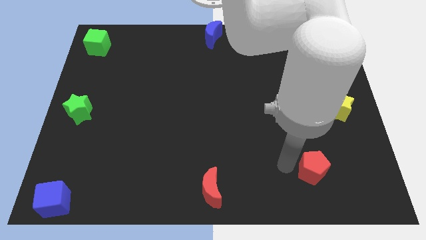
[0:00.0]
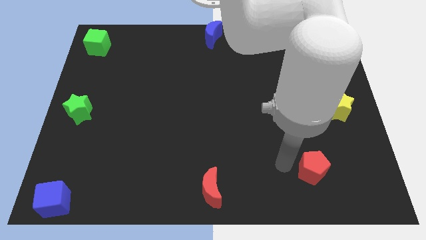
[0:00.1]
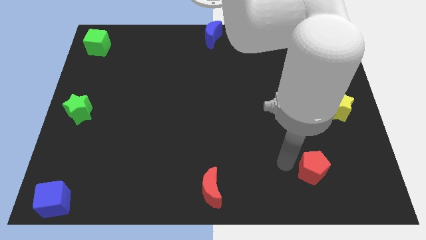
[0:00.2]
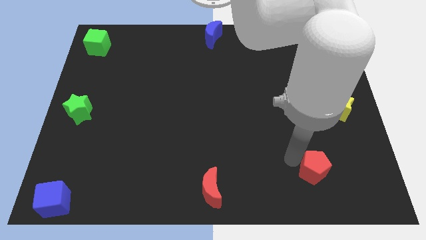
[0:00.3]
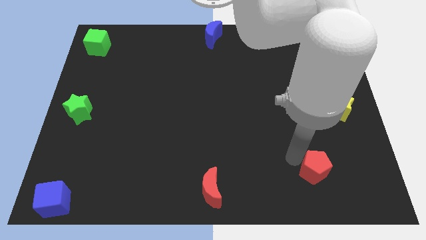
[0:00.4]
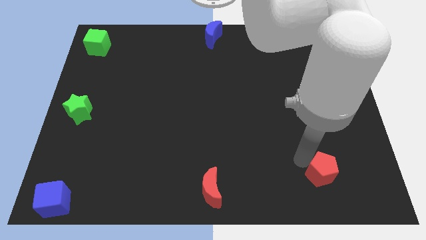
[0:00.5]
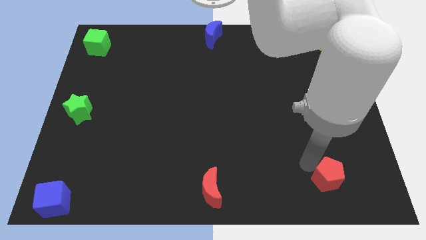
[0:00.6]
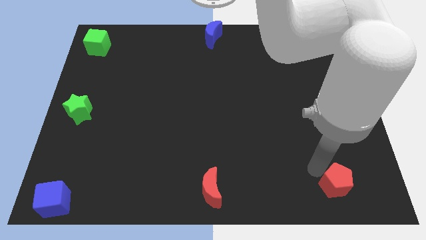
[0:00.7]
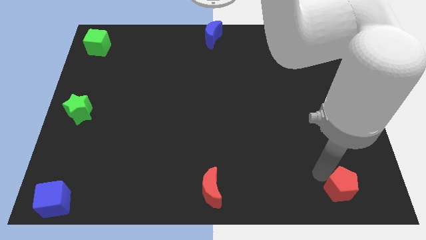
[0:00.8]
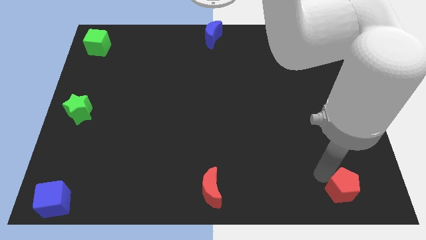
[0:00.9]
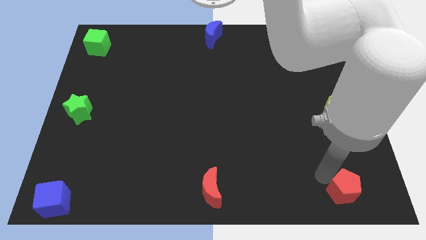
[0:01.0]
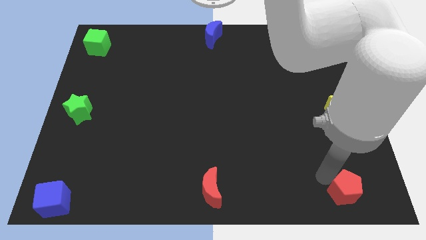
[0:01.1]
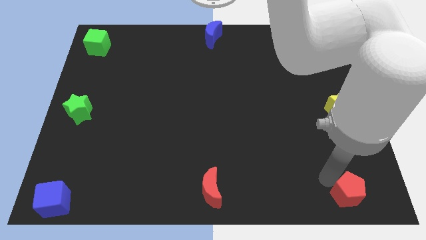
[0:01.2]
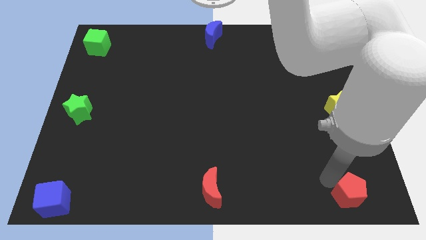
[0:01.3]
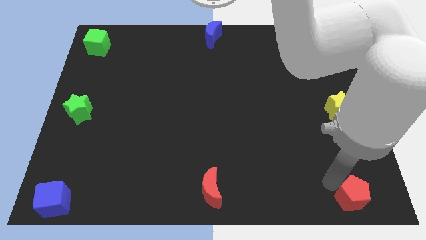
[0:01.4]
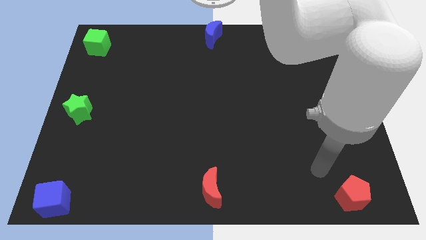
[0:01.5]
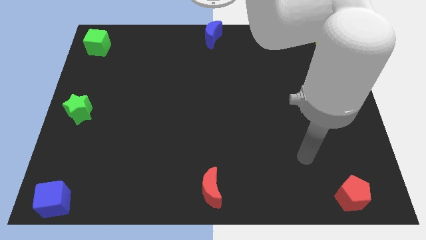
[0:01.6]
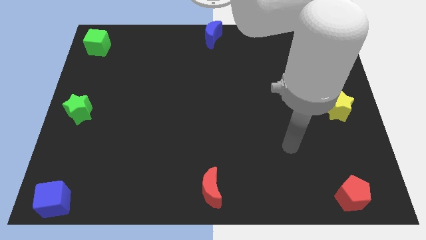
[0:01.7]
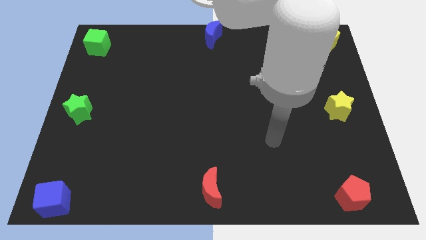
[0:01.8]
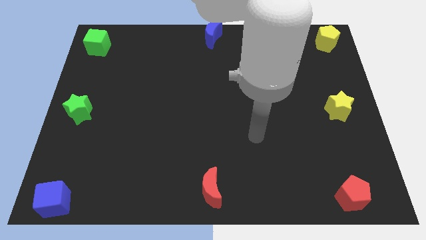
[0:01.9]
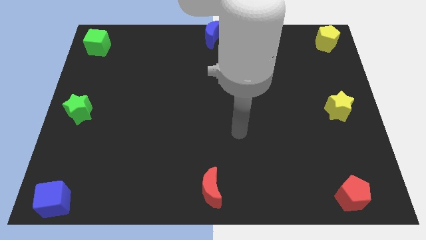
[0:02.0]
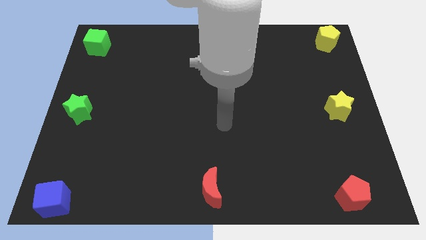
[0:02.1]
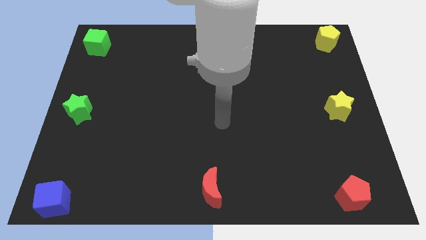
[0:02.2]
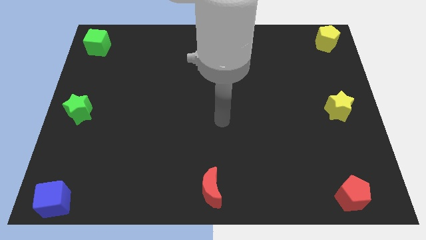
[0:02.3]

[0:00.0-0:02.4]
move the red pentagon to the bottom right corner of the board

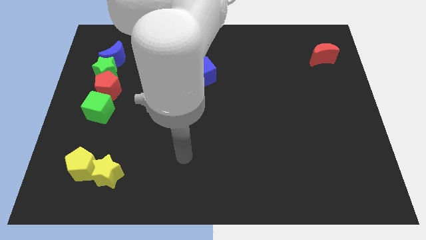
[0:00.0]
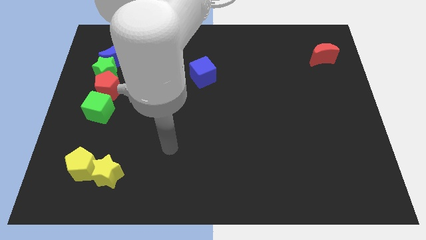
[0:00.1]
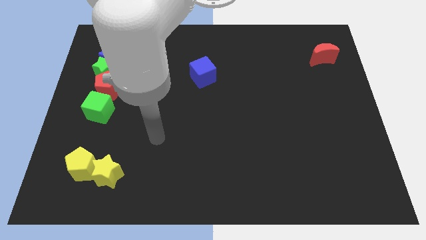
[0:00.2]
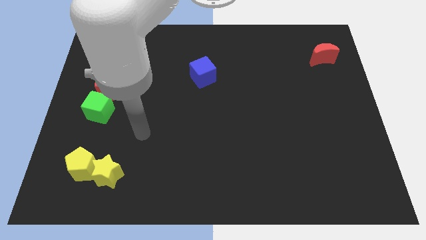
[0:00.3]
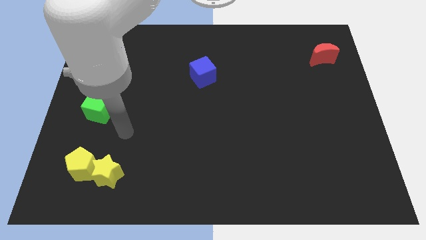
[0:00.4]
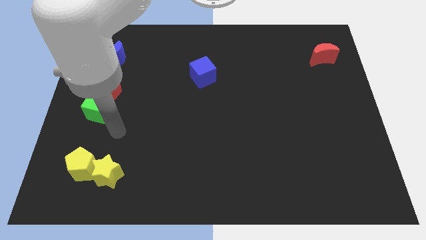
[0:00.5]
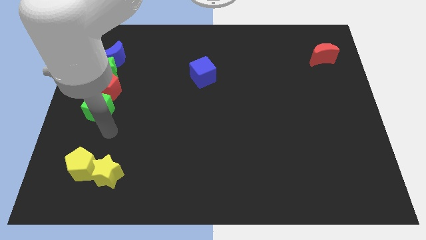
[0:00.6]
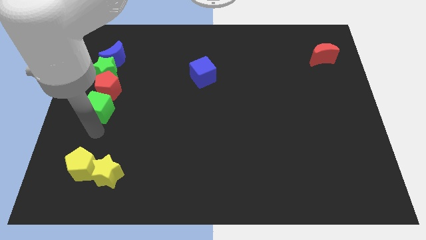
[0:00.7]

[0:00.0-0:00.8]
place your arm at the bottom of the green cube

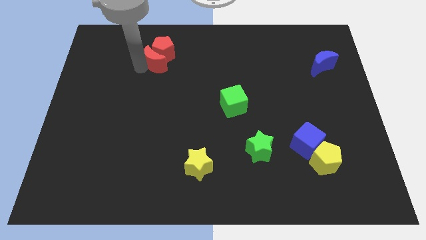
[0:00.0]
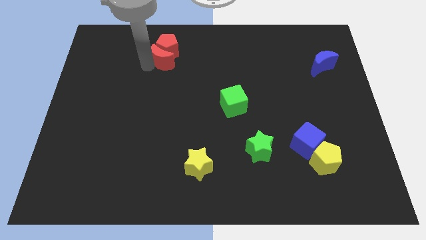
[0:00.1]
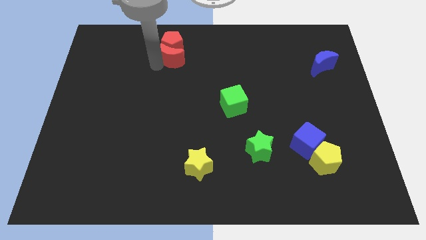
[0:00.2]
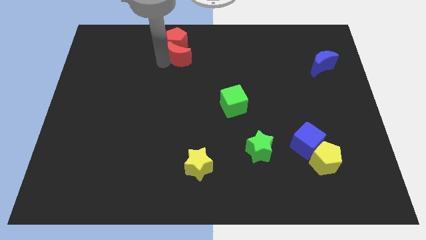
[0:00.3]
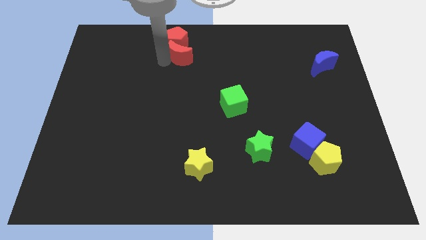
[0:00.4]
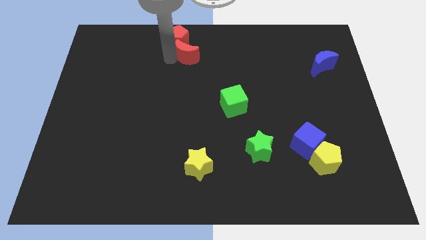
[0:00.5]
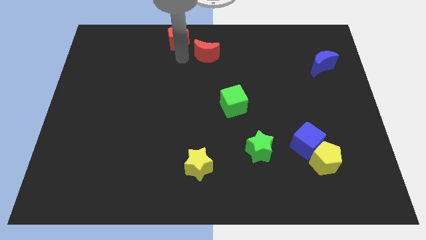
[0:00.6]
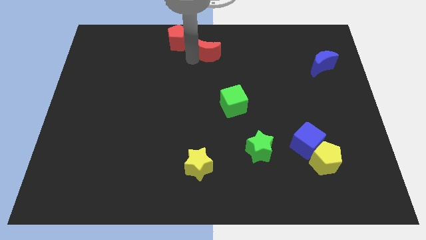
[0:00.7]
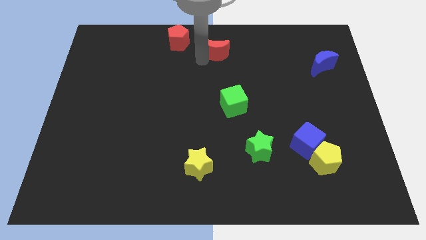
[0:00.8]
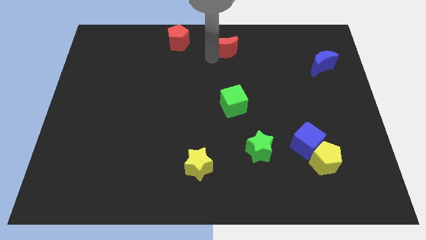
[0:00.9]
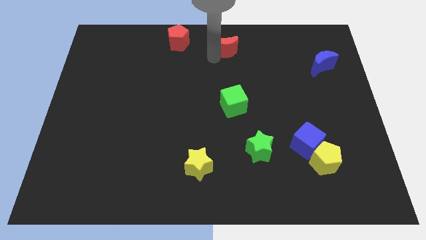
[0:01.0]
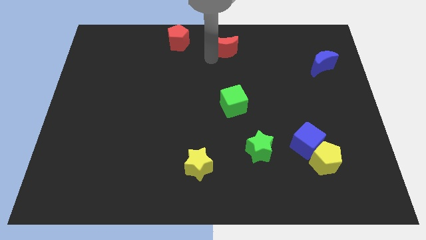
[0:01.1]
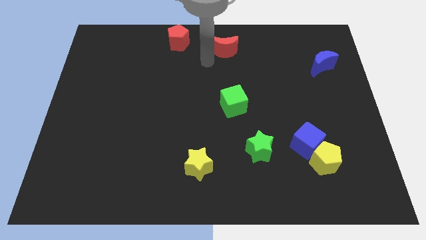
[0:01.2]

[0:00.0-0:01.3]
separate red moon from the red pentagon

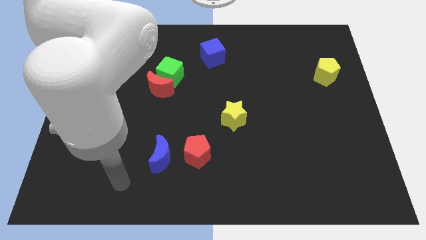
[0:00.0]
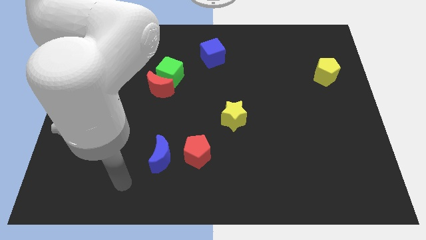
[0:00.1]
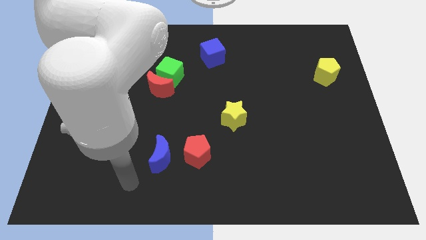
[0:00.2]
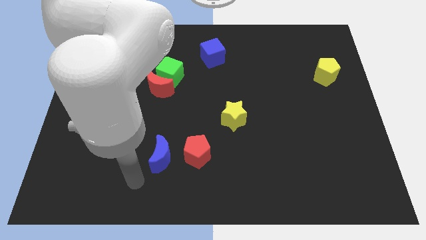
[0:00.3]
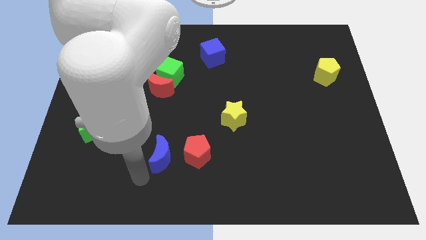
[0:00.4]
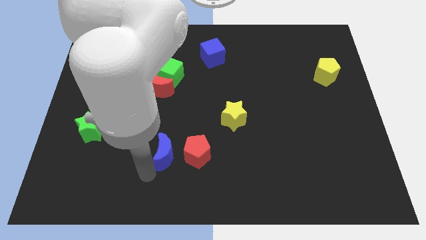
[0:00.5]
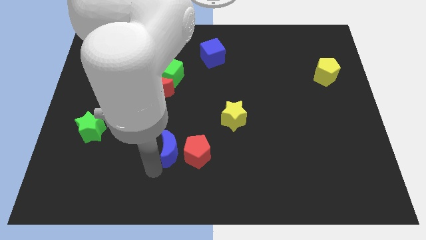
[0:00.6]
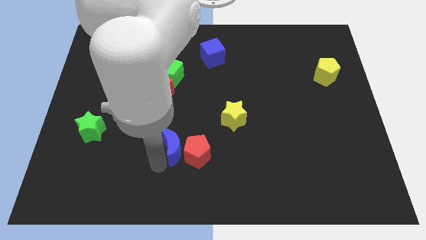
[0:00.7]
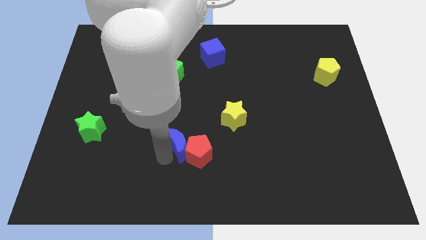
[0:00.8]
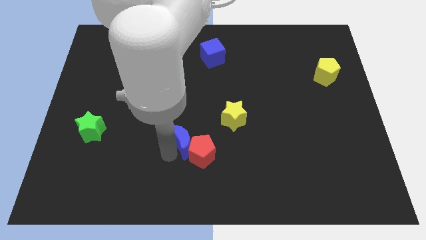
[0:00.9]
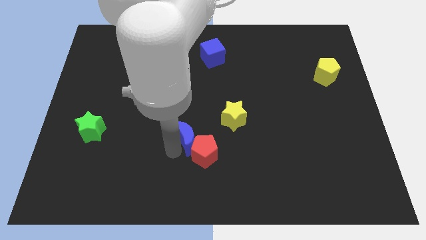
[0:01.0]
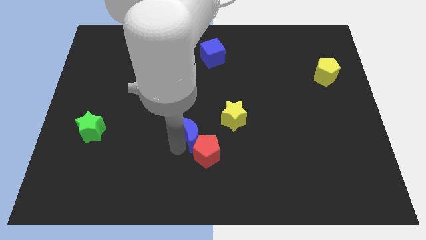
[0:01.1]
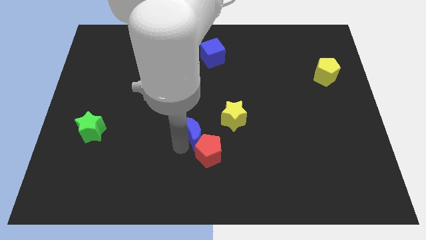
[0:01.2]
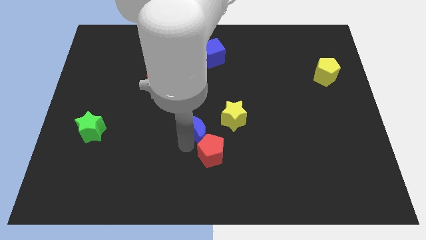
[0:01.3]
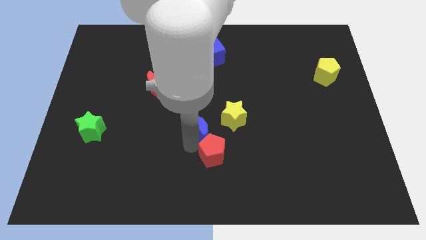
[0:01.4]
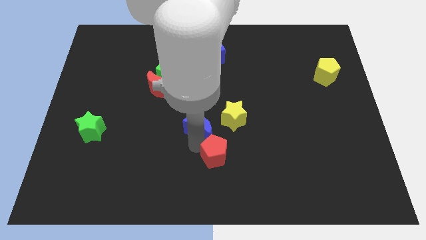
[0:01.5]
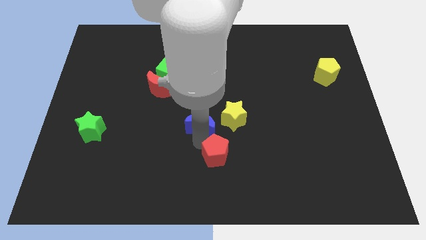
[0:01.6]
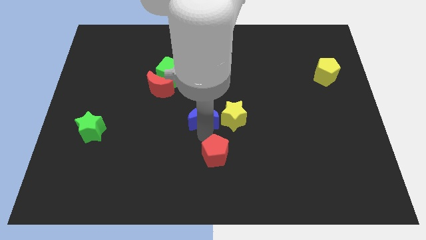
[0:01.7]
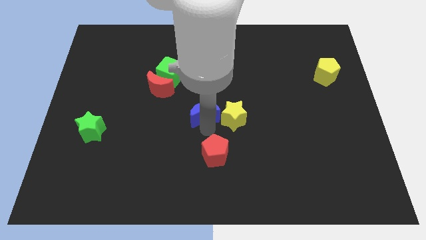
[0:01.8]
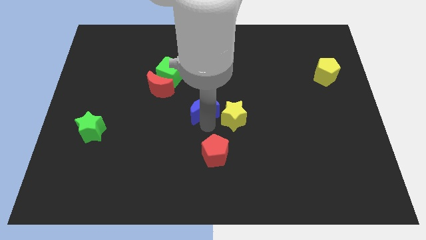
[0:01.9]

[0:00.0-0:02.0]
place the blue crescent left to the yellow star

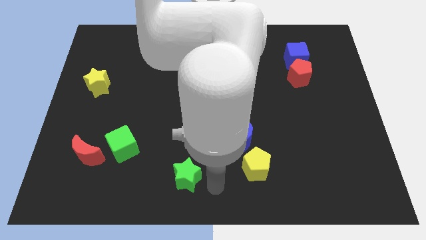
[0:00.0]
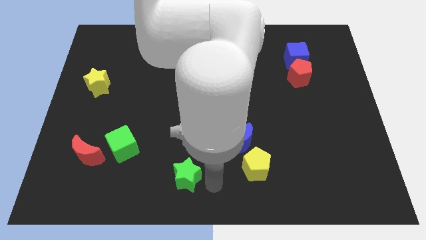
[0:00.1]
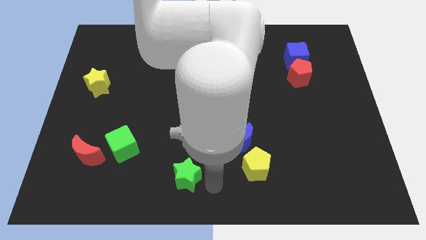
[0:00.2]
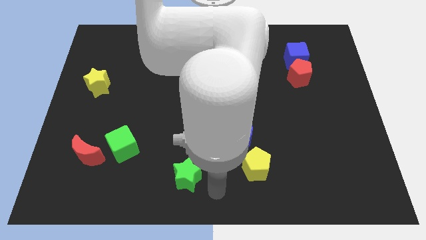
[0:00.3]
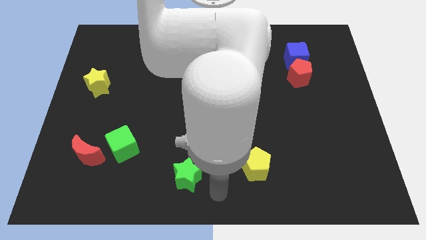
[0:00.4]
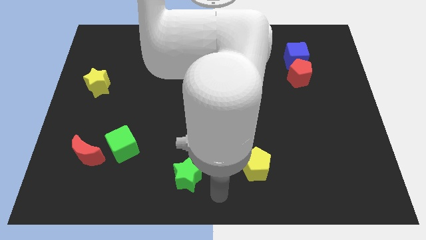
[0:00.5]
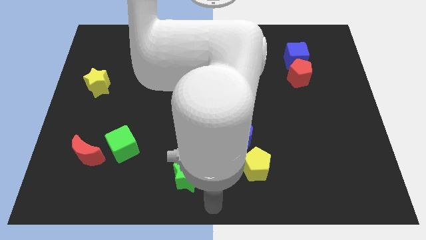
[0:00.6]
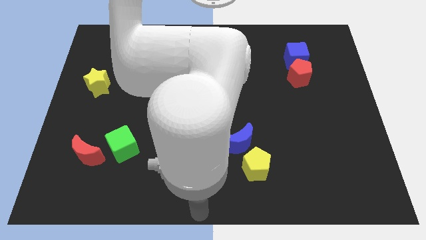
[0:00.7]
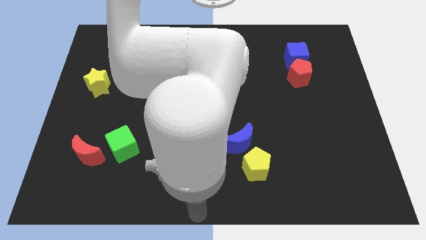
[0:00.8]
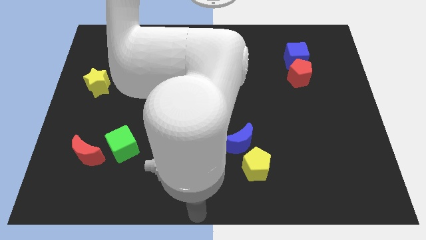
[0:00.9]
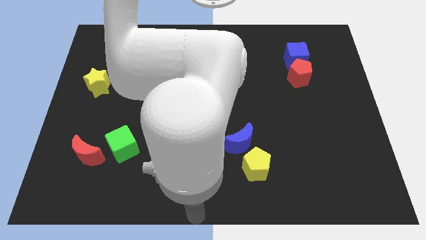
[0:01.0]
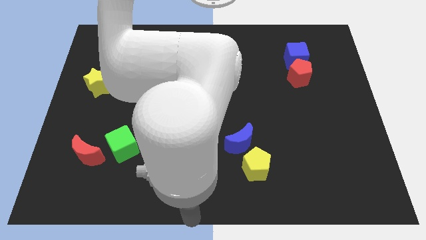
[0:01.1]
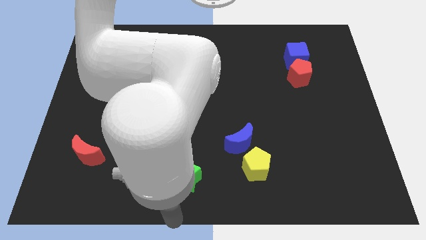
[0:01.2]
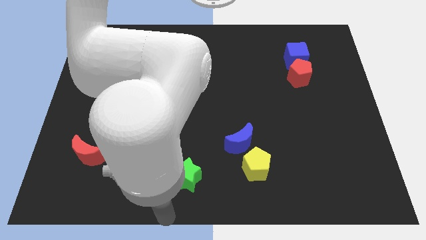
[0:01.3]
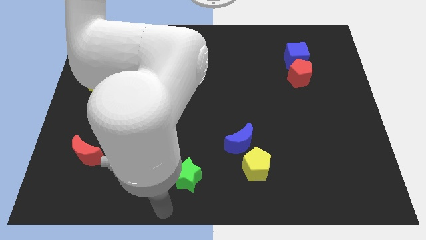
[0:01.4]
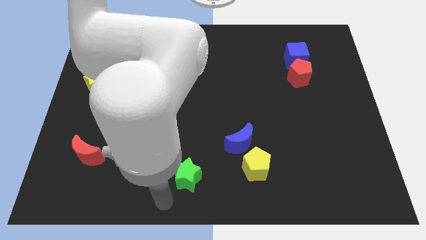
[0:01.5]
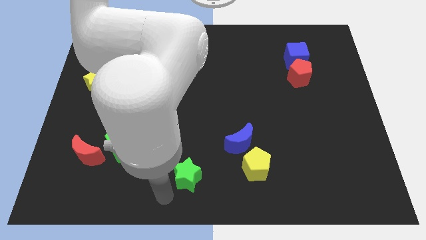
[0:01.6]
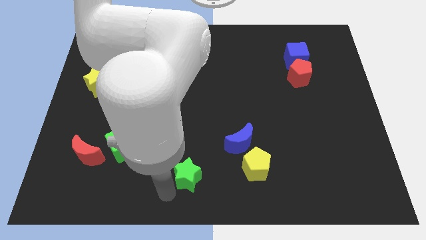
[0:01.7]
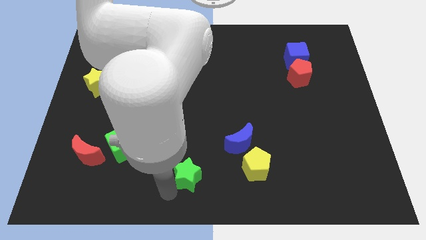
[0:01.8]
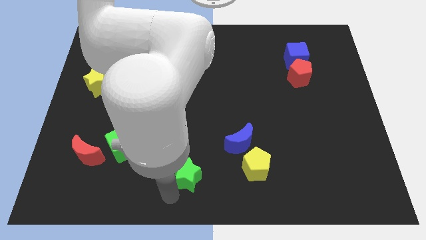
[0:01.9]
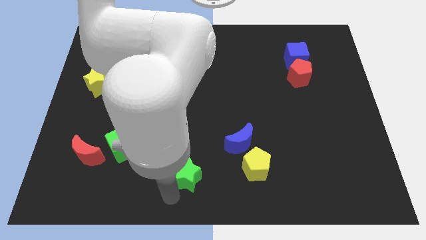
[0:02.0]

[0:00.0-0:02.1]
point your arm below green star

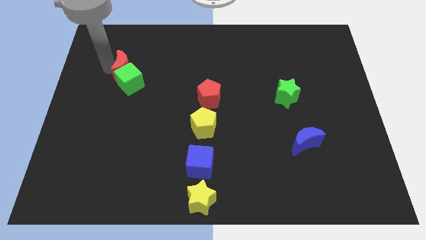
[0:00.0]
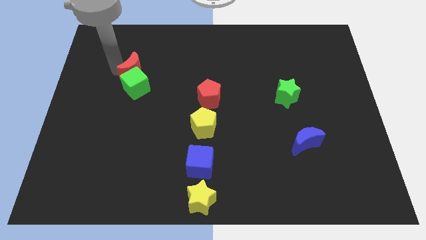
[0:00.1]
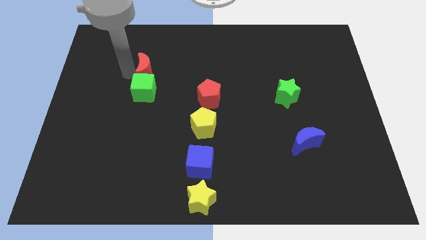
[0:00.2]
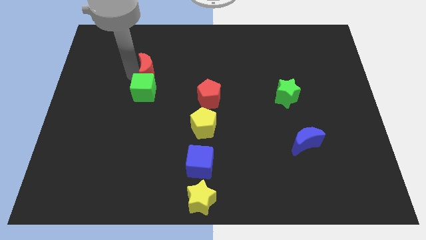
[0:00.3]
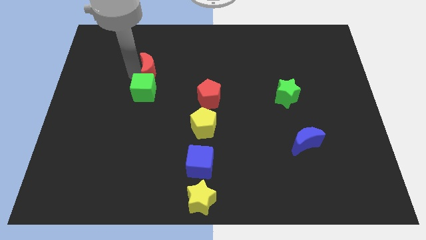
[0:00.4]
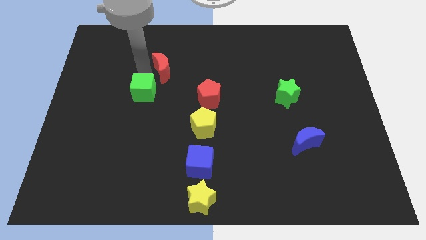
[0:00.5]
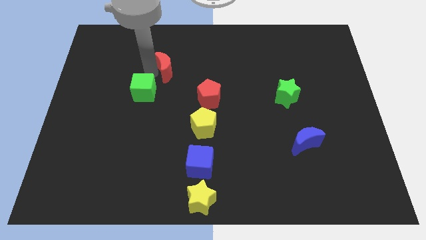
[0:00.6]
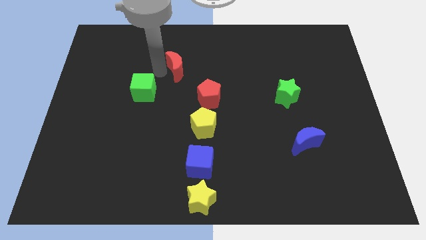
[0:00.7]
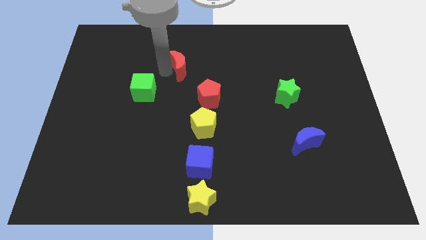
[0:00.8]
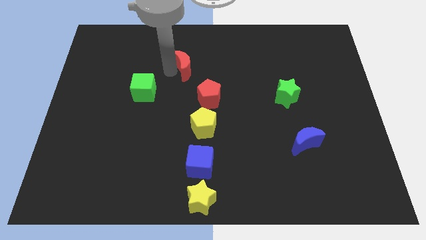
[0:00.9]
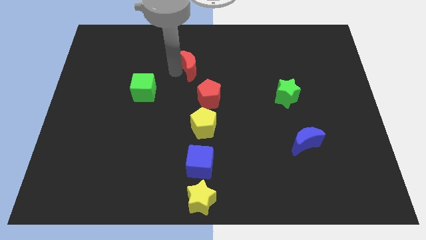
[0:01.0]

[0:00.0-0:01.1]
push the red crescent away from the green cube
